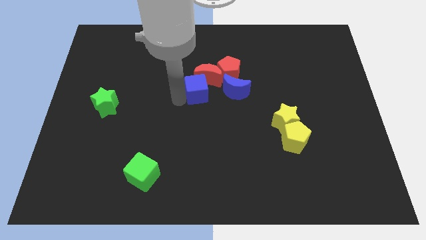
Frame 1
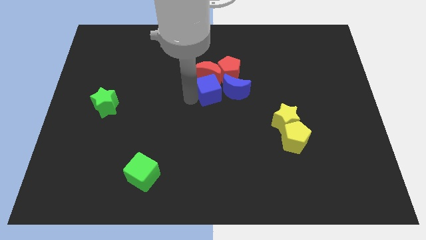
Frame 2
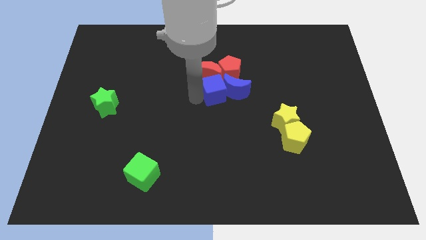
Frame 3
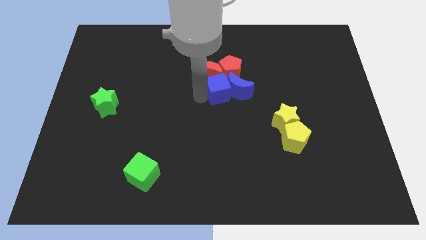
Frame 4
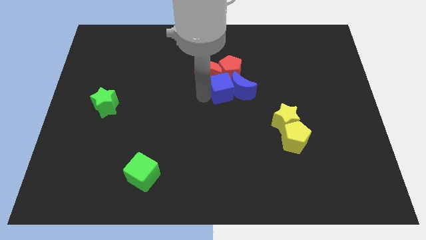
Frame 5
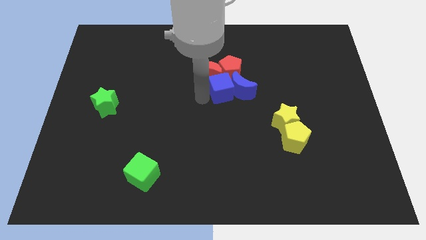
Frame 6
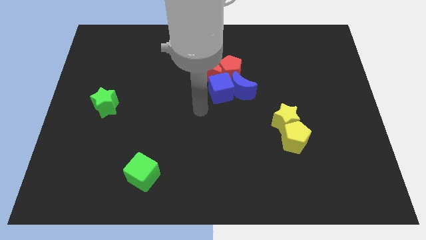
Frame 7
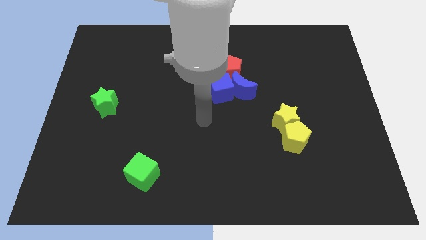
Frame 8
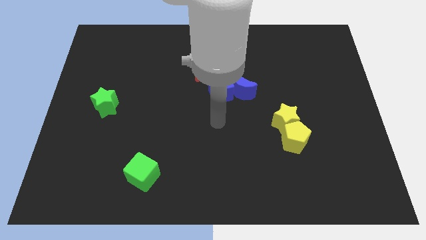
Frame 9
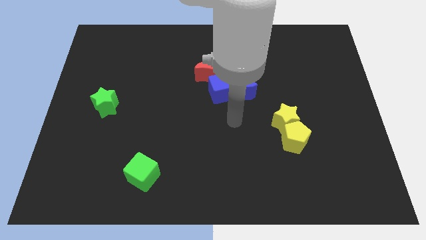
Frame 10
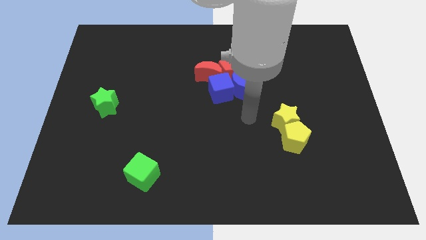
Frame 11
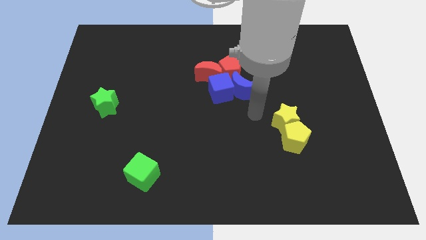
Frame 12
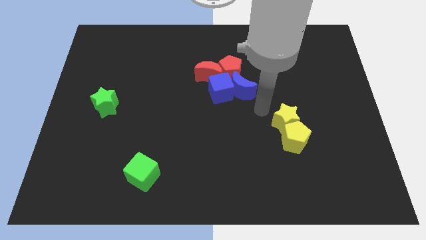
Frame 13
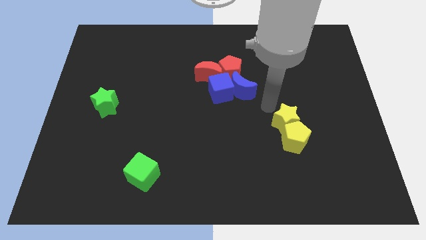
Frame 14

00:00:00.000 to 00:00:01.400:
slide the blue cube into the blue moon

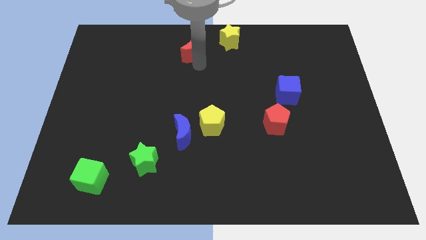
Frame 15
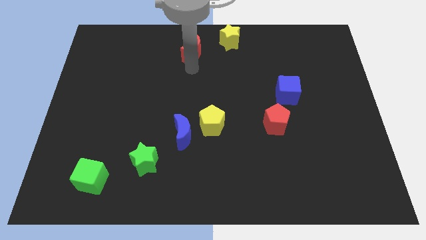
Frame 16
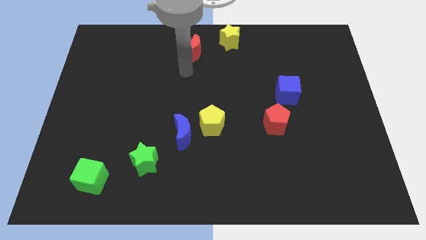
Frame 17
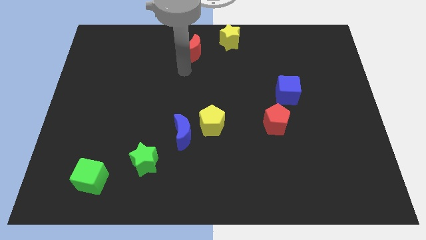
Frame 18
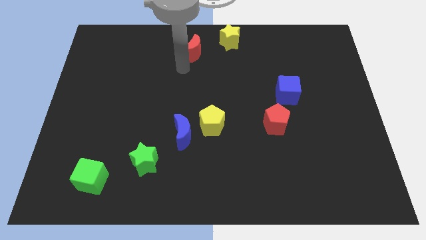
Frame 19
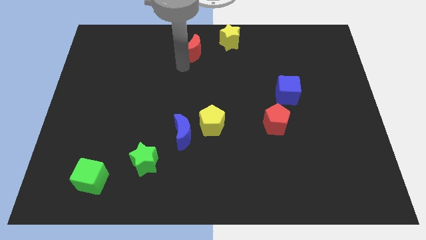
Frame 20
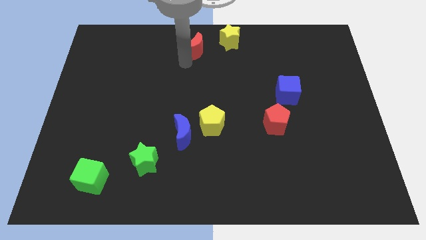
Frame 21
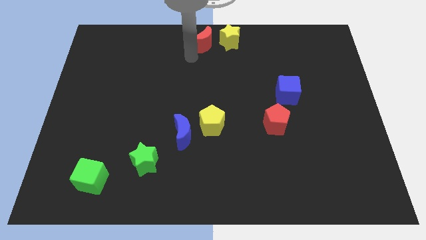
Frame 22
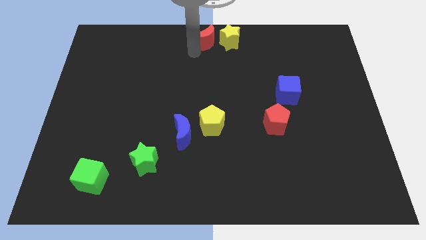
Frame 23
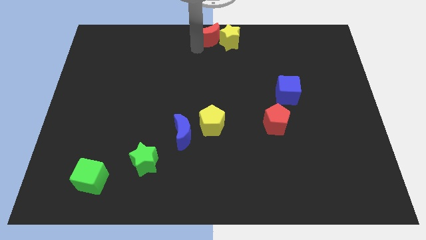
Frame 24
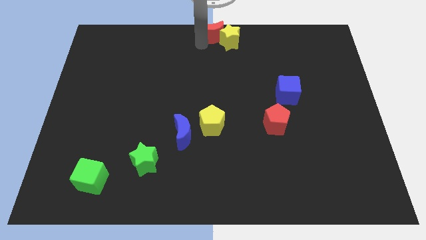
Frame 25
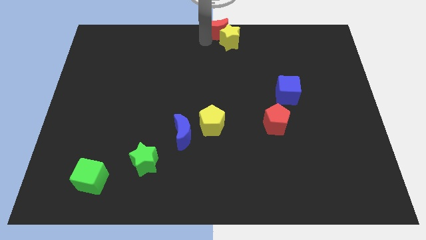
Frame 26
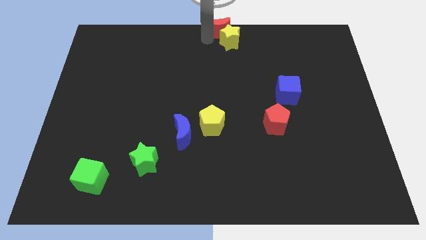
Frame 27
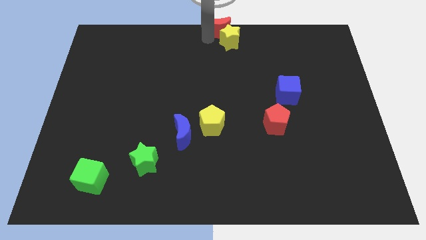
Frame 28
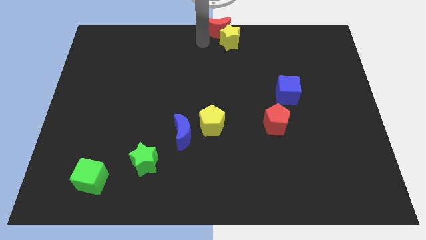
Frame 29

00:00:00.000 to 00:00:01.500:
push the red moon above the yellow star

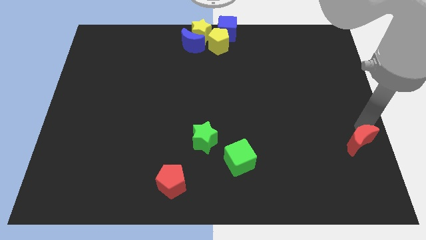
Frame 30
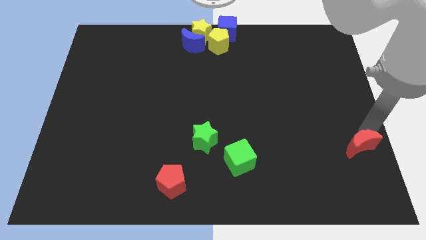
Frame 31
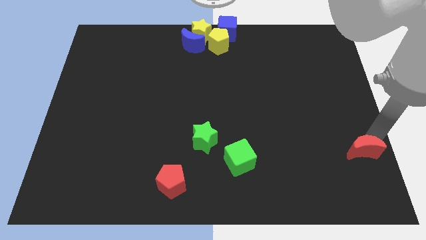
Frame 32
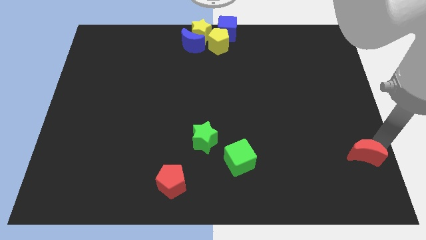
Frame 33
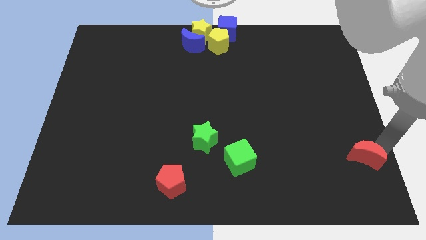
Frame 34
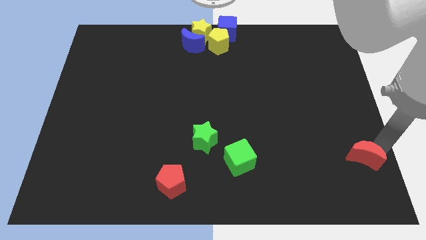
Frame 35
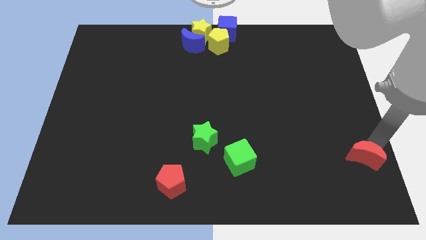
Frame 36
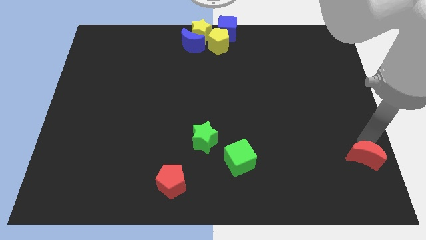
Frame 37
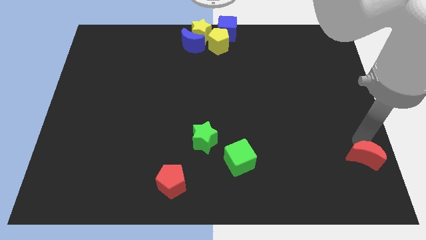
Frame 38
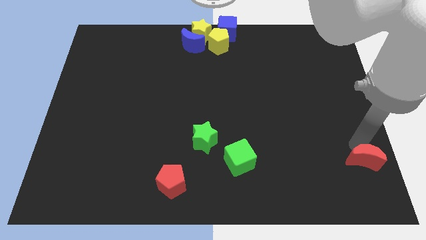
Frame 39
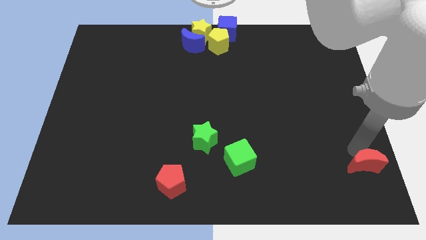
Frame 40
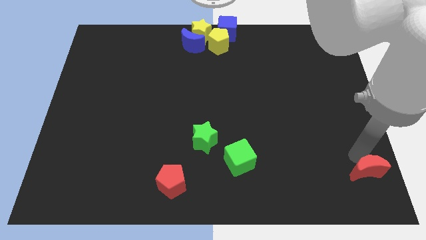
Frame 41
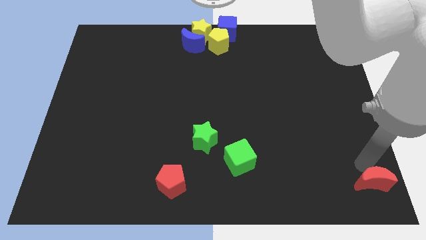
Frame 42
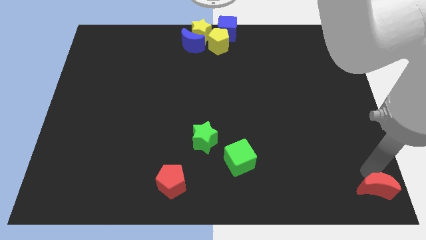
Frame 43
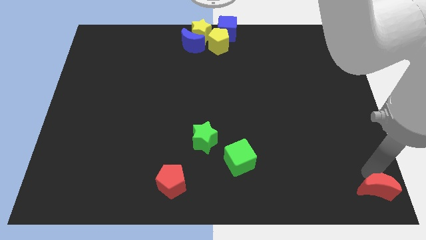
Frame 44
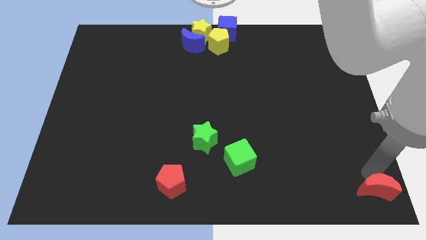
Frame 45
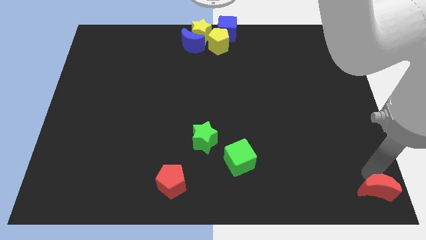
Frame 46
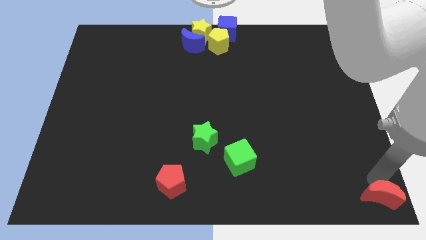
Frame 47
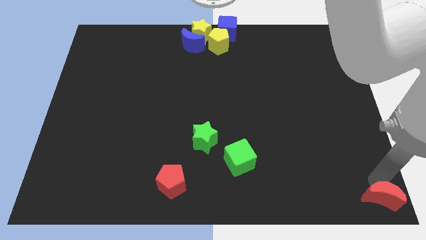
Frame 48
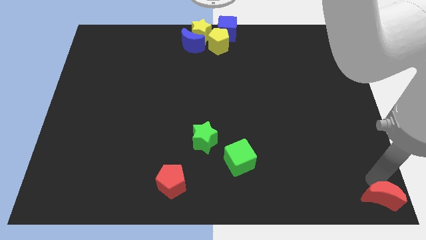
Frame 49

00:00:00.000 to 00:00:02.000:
move the red crescent to the bottom right corner

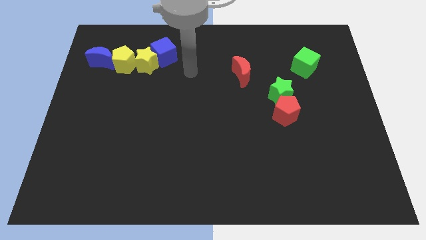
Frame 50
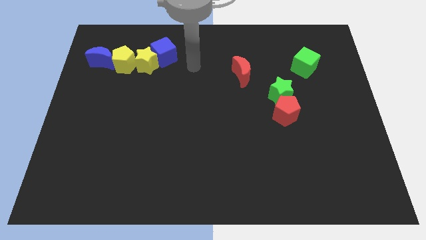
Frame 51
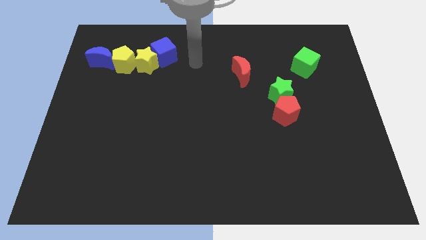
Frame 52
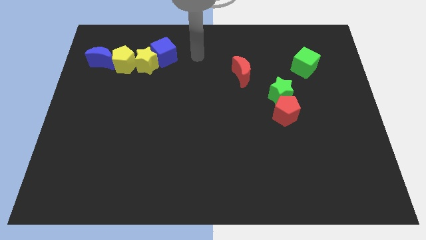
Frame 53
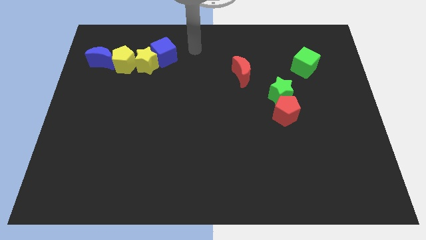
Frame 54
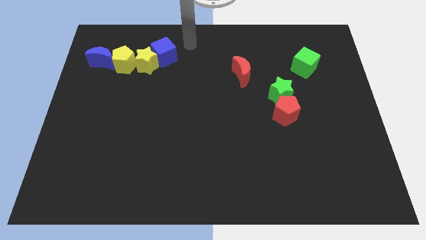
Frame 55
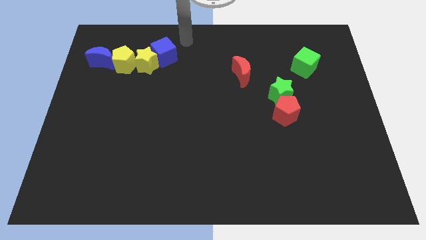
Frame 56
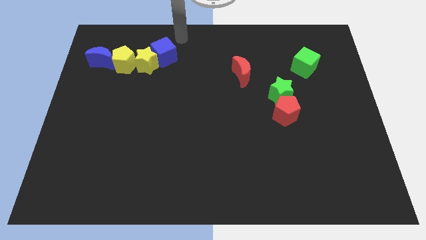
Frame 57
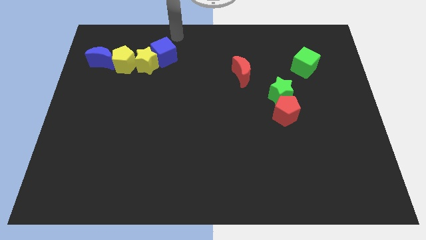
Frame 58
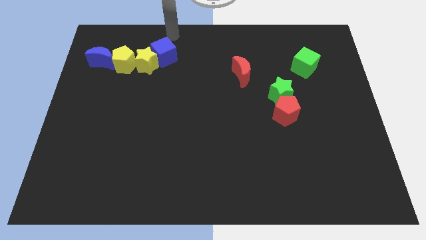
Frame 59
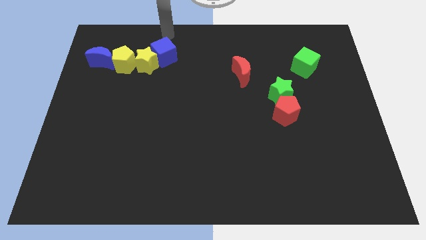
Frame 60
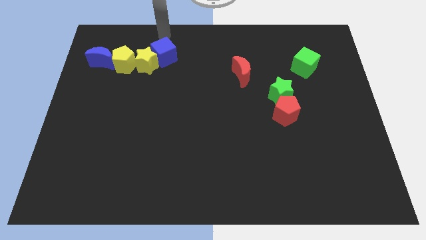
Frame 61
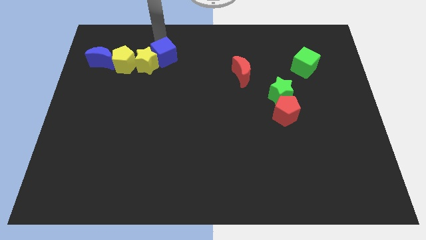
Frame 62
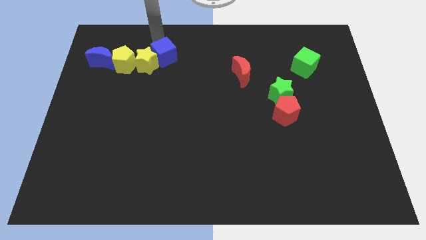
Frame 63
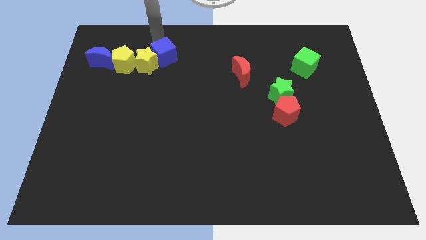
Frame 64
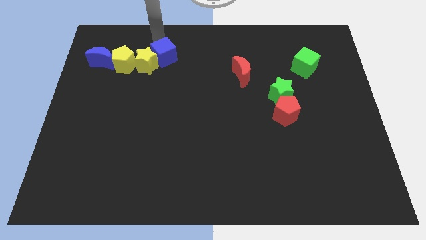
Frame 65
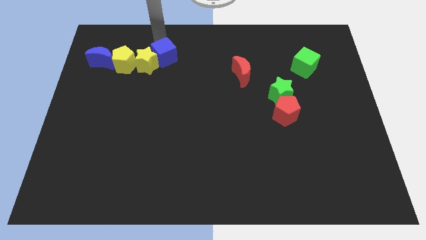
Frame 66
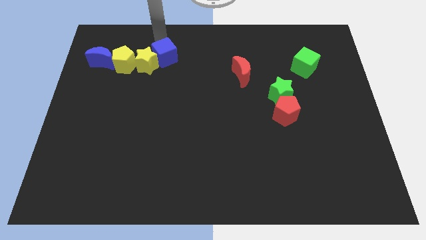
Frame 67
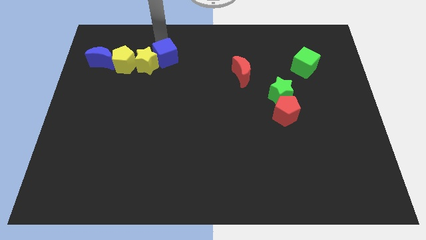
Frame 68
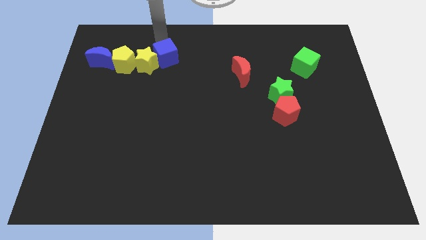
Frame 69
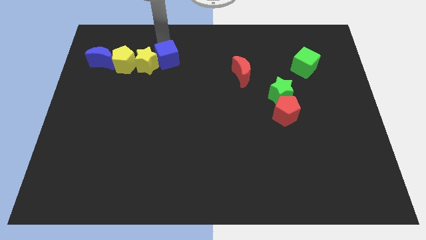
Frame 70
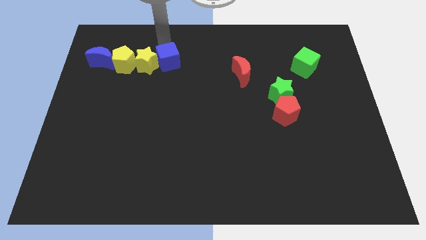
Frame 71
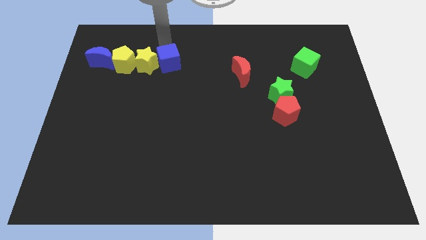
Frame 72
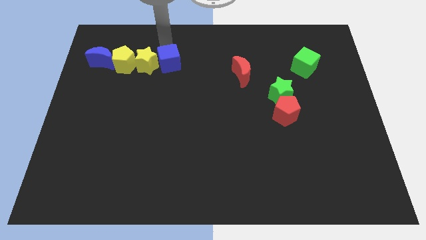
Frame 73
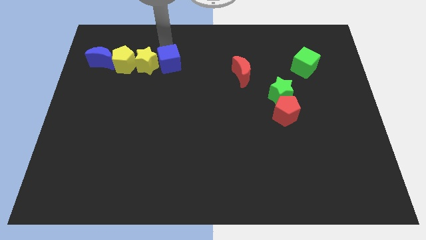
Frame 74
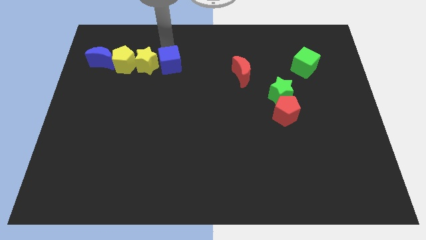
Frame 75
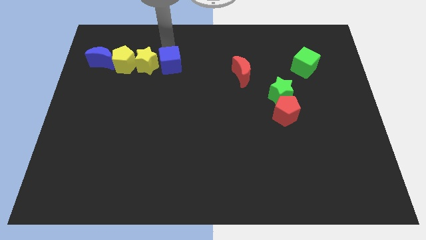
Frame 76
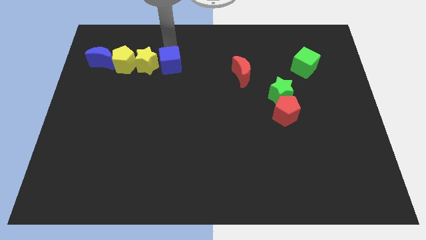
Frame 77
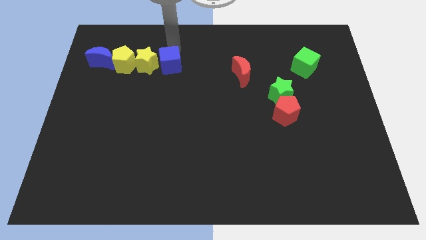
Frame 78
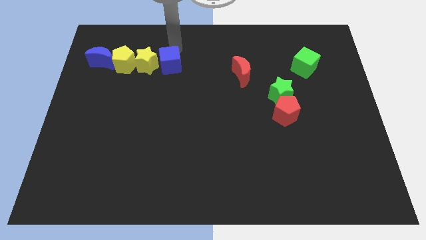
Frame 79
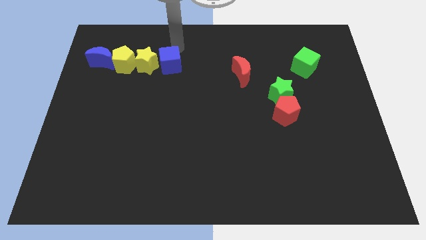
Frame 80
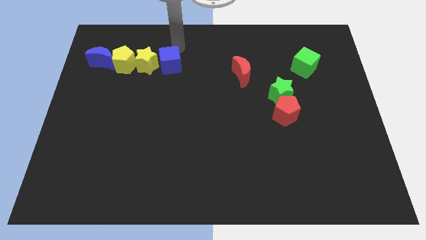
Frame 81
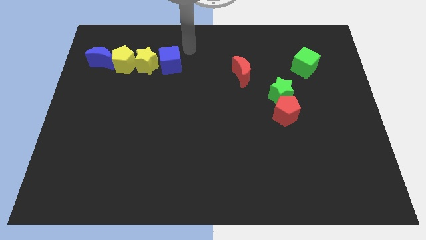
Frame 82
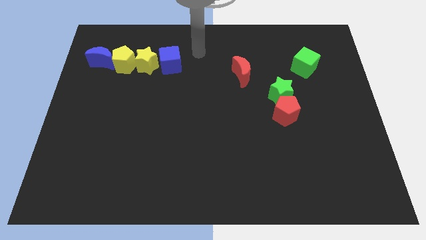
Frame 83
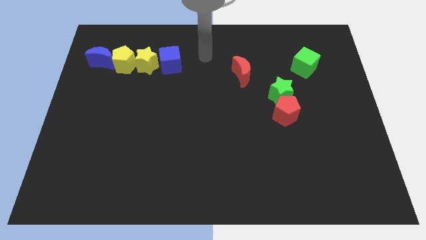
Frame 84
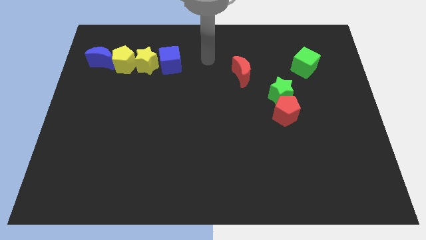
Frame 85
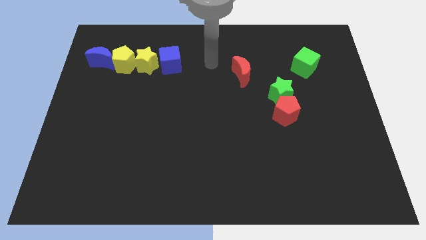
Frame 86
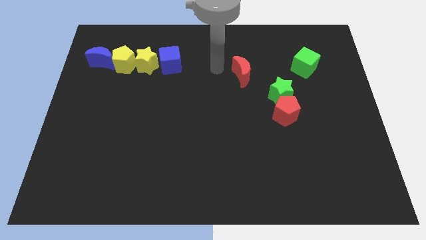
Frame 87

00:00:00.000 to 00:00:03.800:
push the blue cube to the right of yellow star

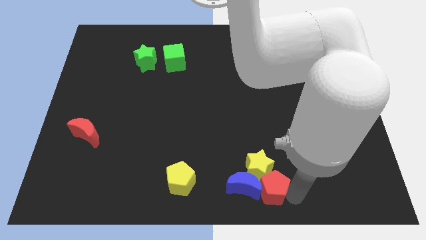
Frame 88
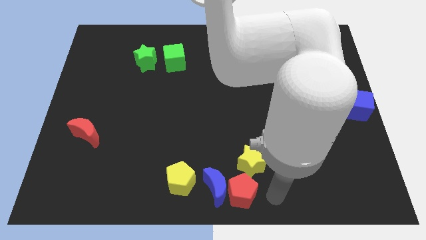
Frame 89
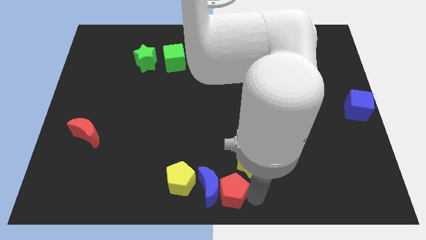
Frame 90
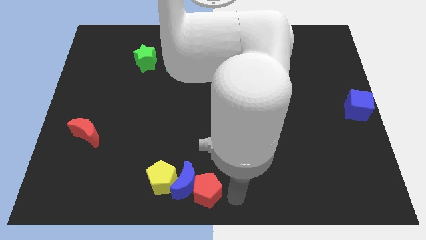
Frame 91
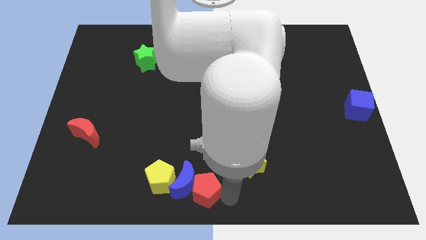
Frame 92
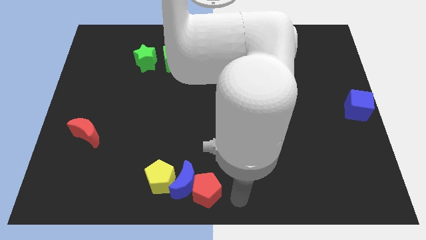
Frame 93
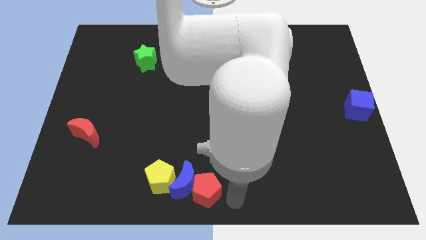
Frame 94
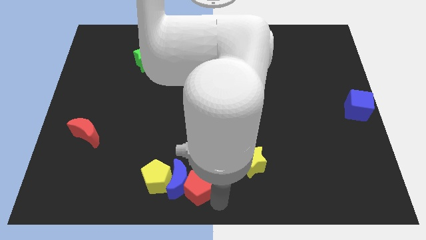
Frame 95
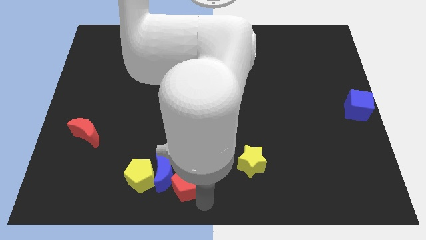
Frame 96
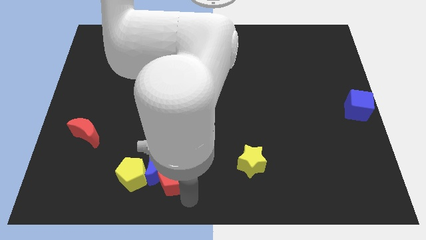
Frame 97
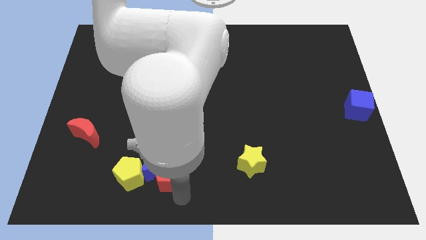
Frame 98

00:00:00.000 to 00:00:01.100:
push the blue crescent and red pentagon together towards the yellow pentagon
